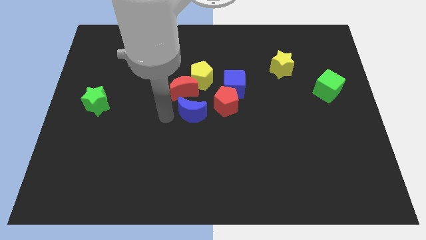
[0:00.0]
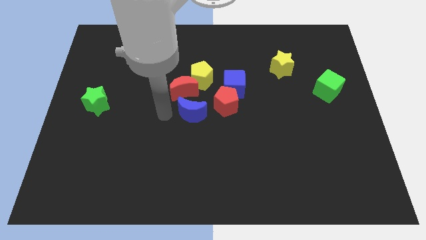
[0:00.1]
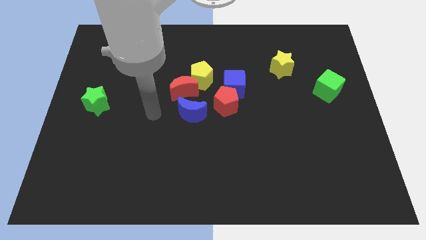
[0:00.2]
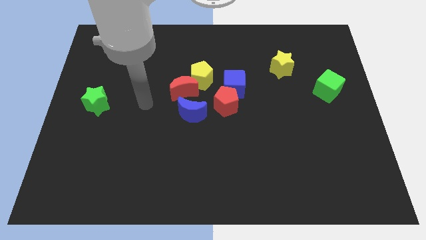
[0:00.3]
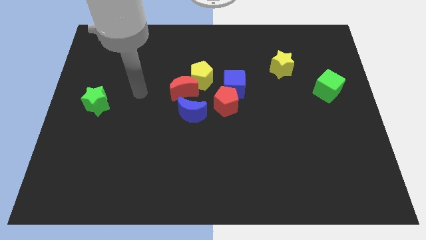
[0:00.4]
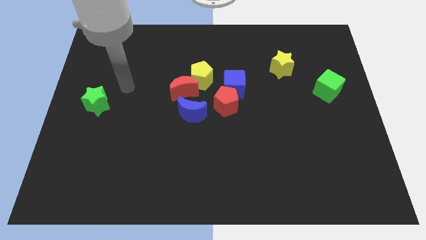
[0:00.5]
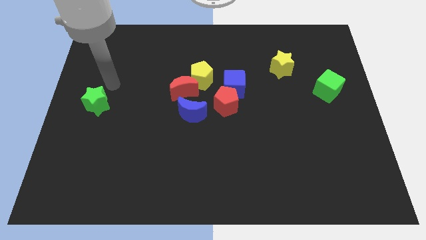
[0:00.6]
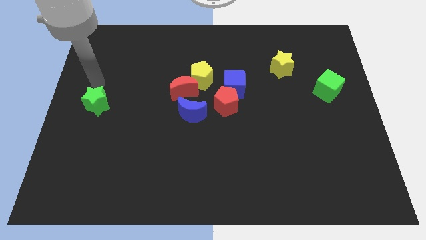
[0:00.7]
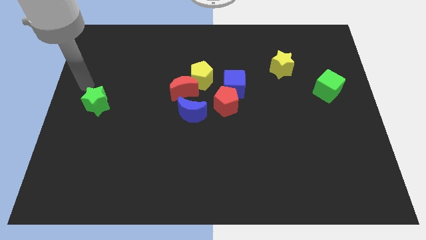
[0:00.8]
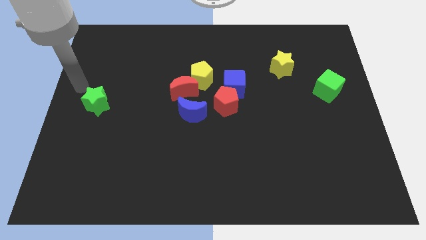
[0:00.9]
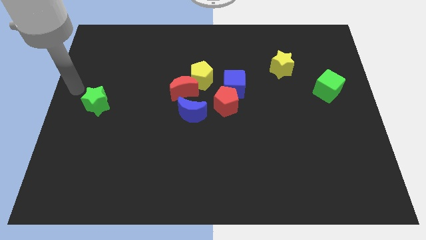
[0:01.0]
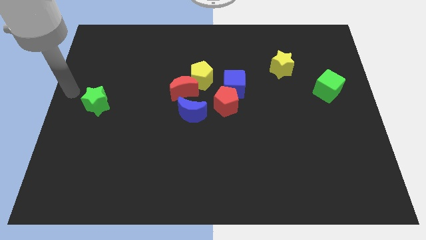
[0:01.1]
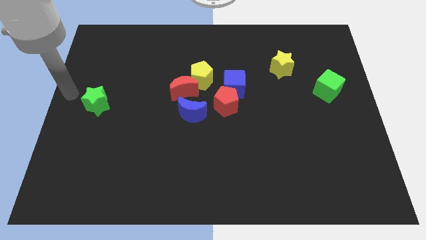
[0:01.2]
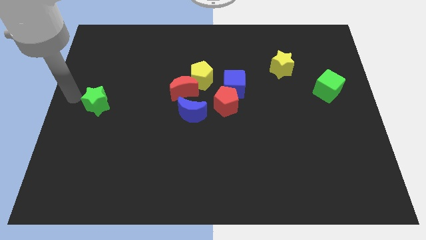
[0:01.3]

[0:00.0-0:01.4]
point your arm at the left of the green star

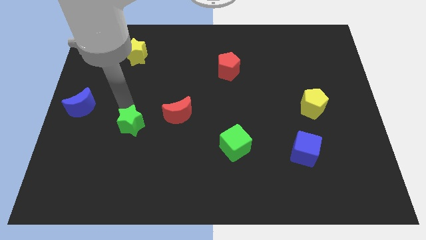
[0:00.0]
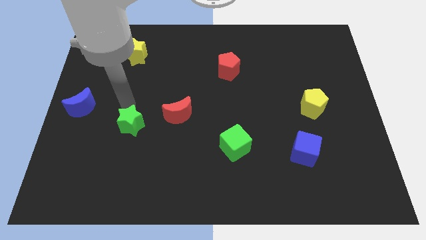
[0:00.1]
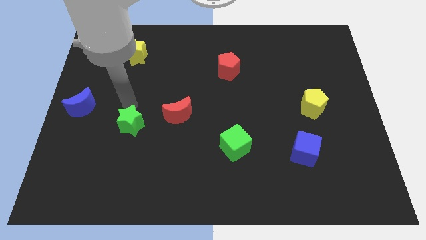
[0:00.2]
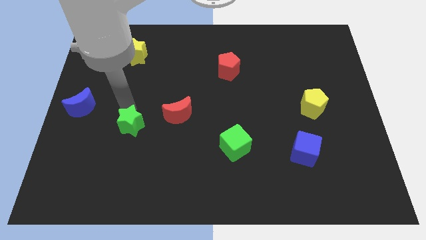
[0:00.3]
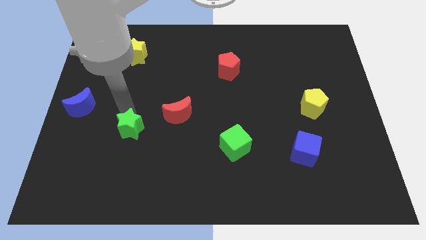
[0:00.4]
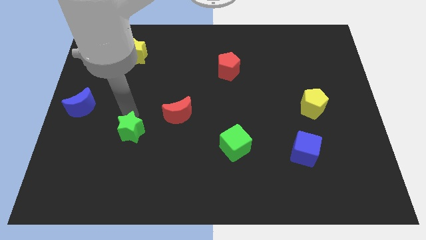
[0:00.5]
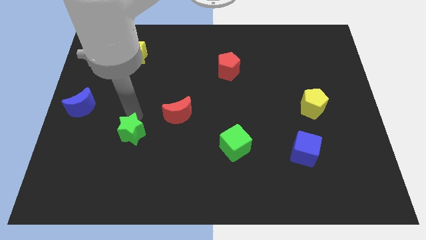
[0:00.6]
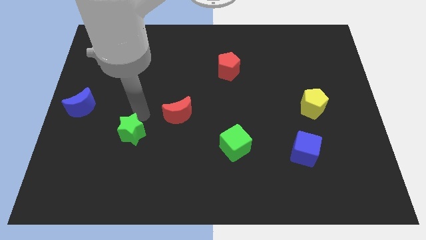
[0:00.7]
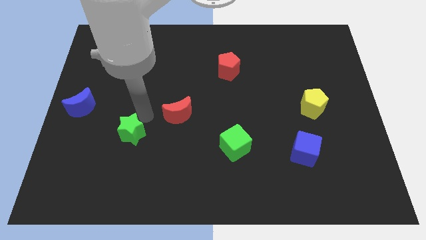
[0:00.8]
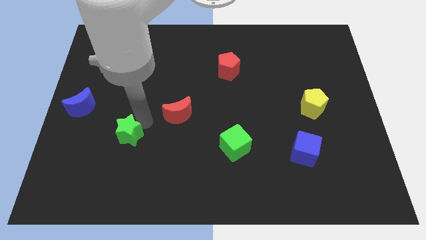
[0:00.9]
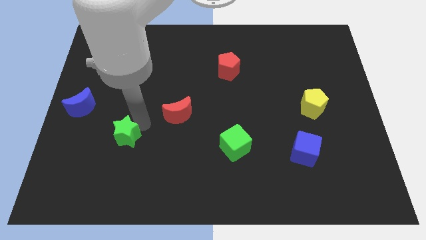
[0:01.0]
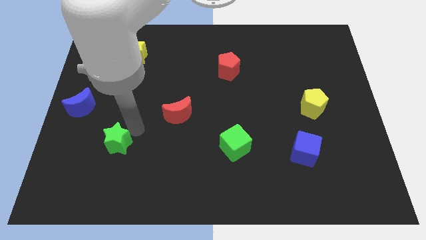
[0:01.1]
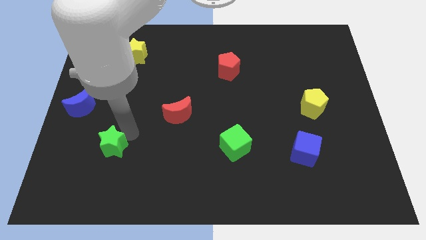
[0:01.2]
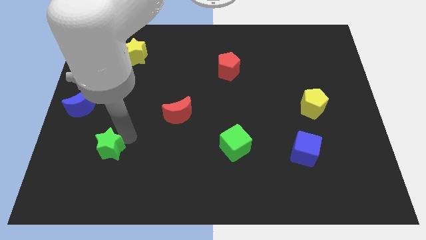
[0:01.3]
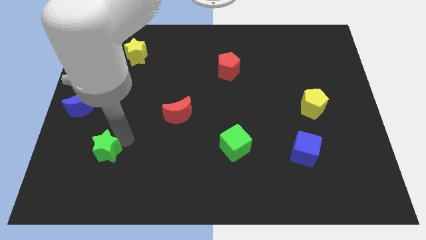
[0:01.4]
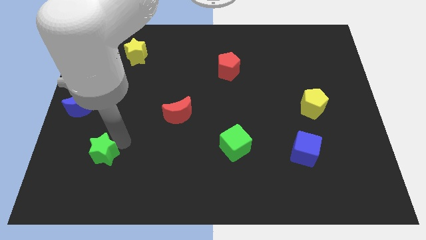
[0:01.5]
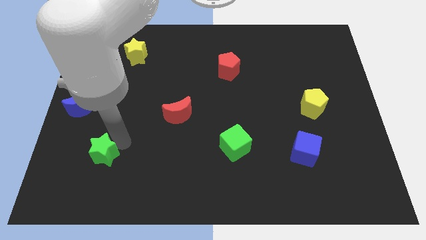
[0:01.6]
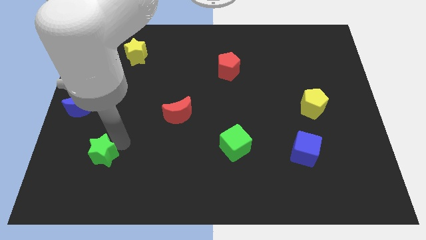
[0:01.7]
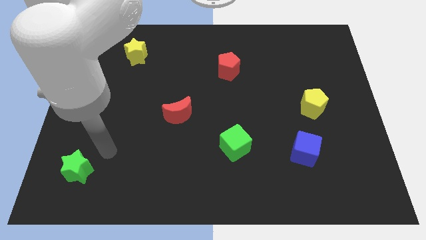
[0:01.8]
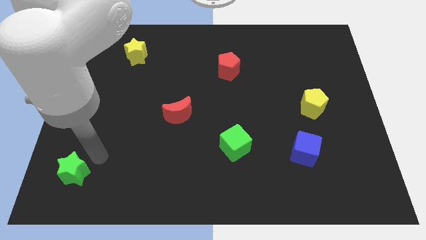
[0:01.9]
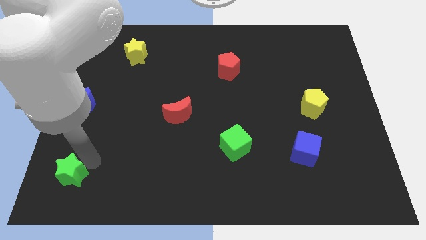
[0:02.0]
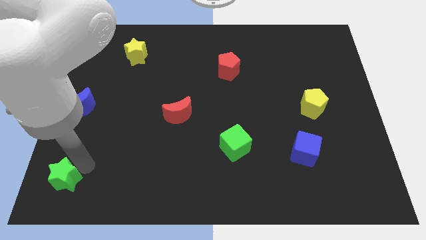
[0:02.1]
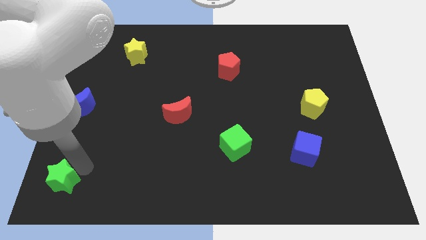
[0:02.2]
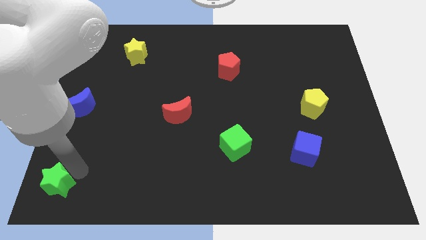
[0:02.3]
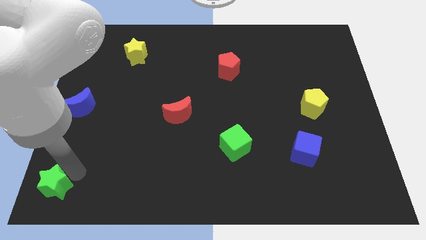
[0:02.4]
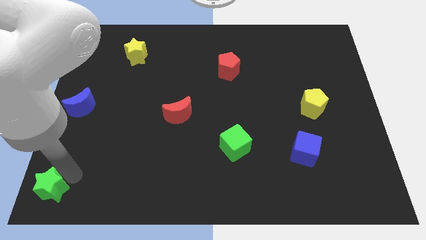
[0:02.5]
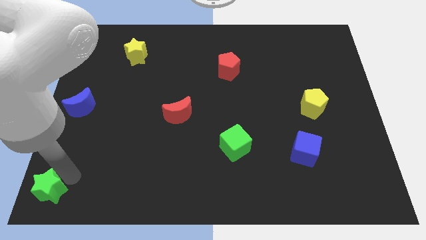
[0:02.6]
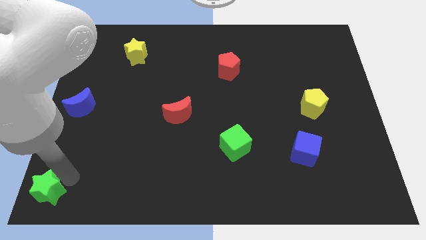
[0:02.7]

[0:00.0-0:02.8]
move the green star to the bottom left corner

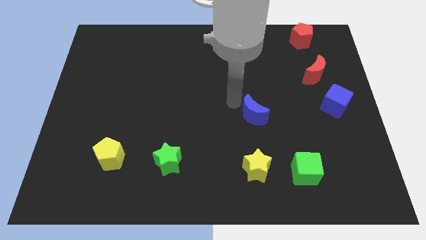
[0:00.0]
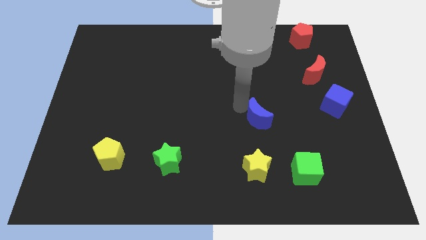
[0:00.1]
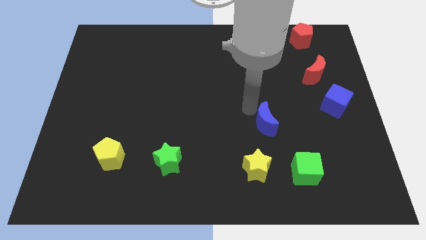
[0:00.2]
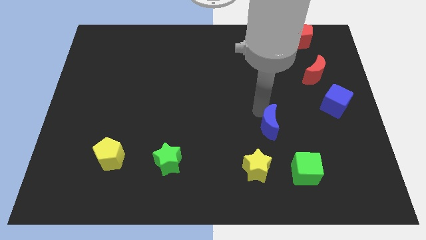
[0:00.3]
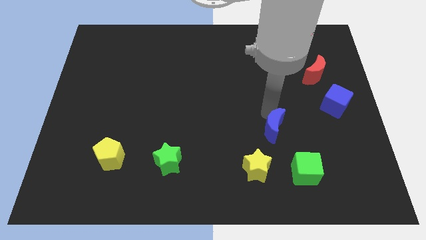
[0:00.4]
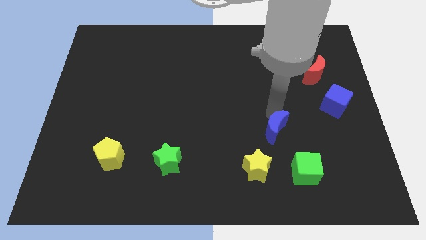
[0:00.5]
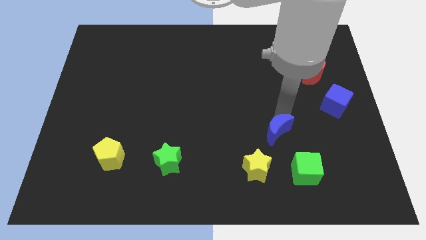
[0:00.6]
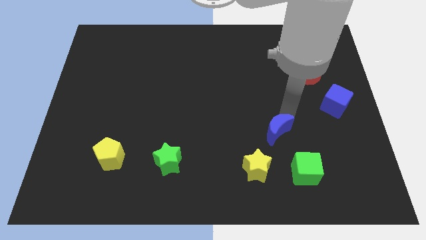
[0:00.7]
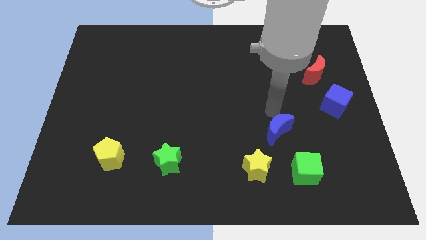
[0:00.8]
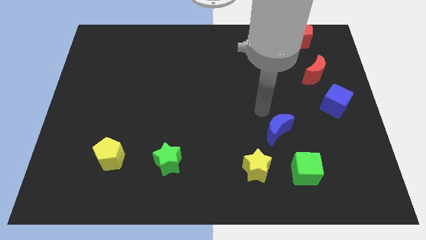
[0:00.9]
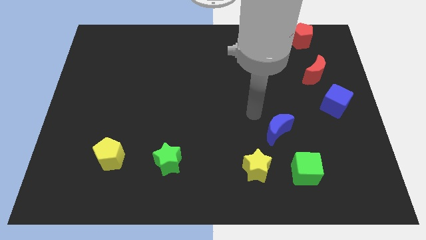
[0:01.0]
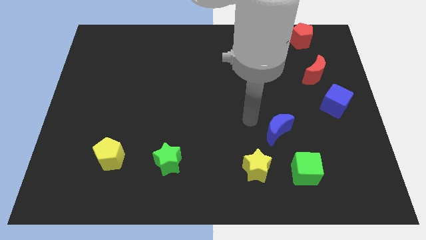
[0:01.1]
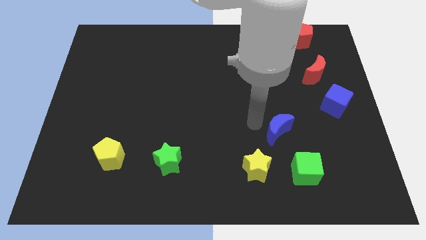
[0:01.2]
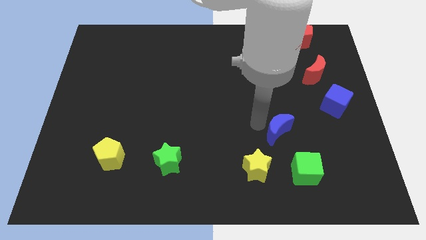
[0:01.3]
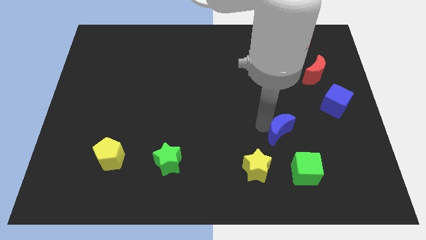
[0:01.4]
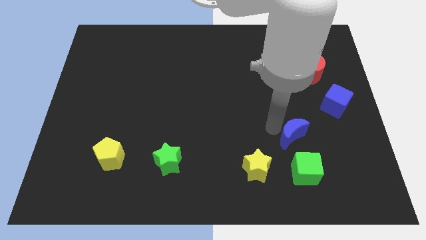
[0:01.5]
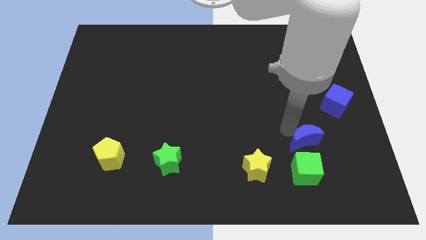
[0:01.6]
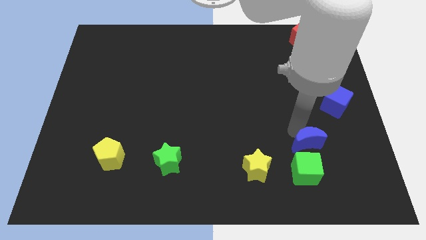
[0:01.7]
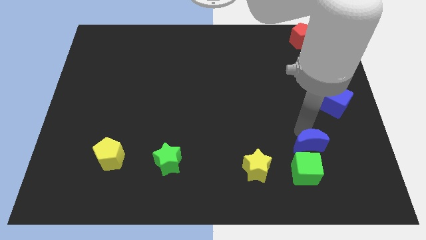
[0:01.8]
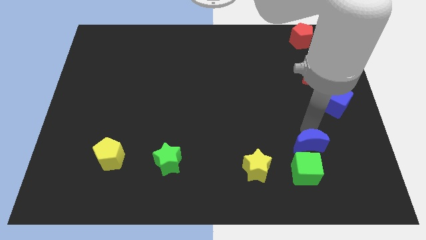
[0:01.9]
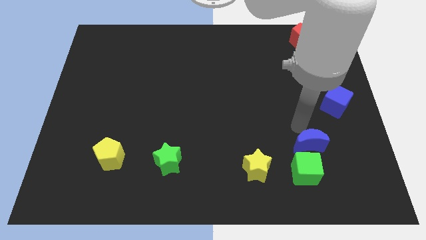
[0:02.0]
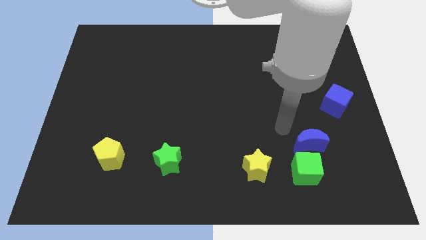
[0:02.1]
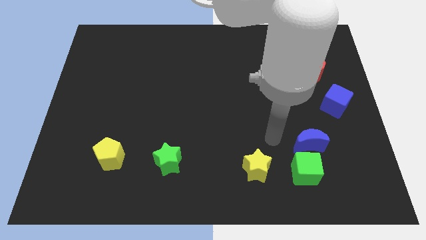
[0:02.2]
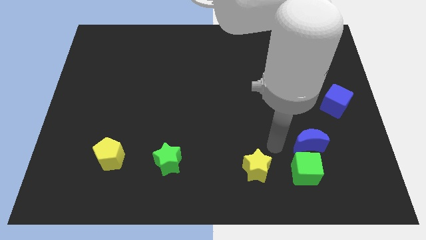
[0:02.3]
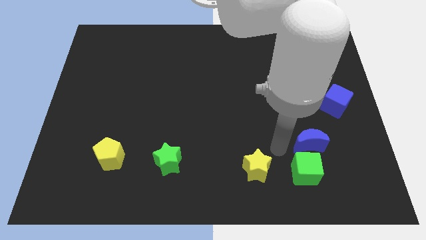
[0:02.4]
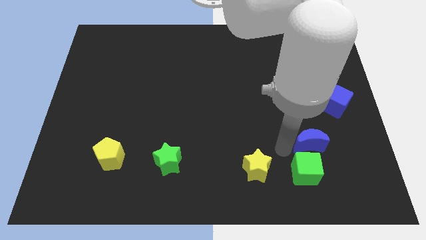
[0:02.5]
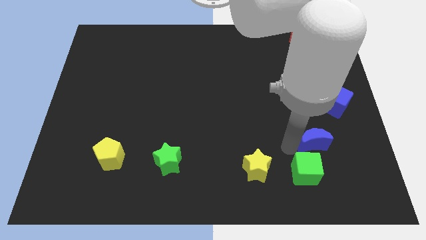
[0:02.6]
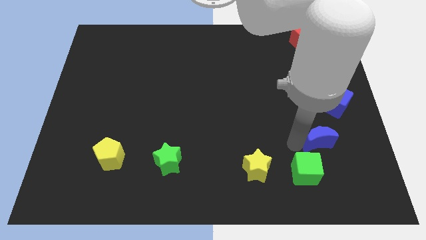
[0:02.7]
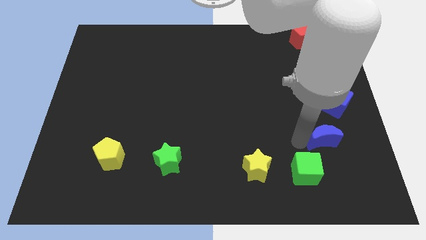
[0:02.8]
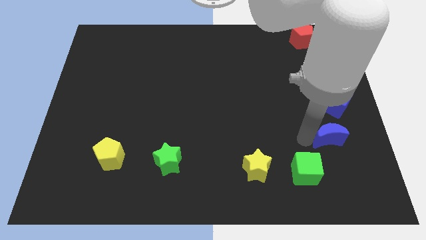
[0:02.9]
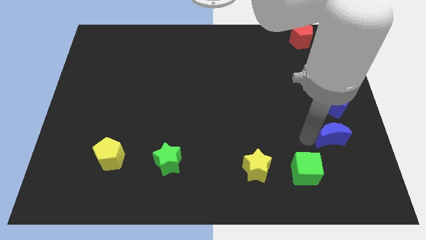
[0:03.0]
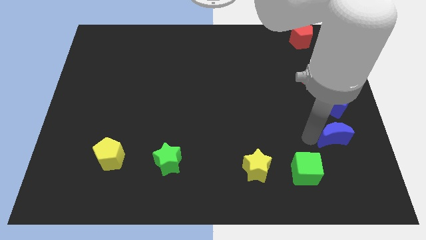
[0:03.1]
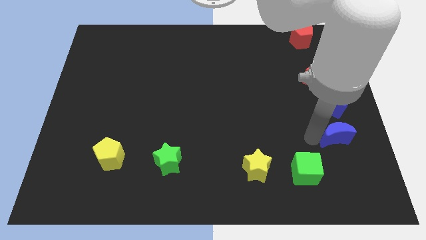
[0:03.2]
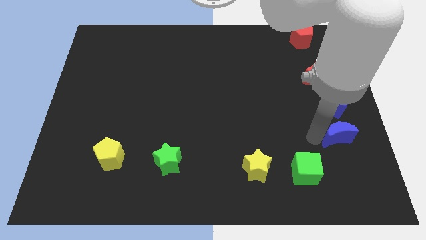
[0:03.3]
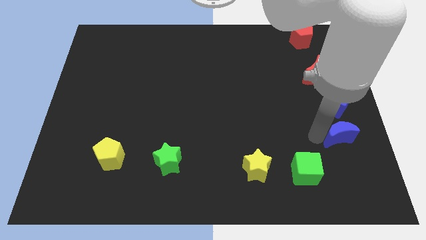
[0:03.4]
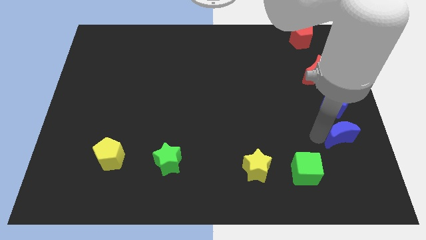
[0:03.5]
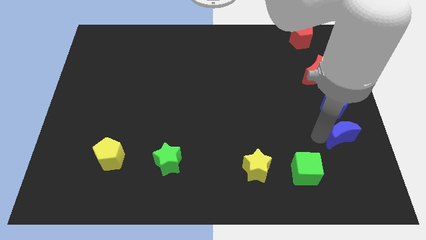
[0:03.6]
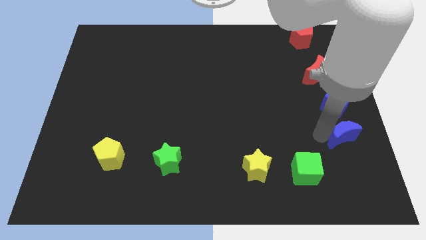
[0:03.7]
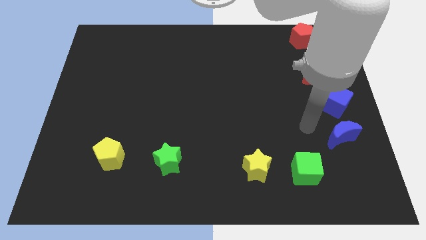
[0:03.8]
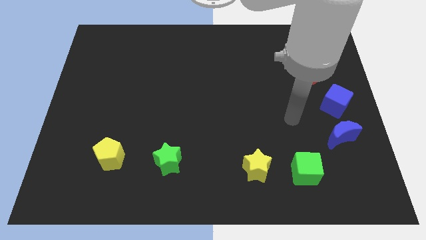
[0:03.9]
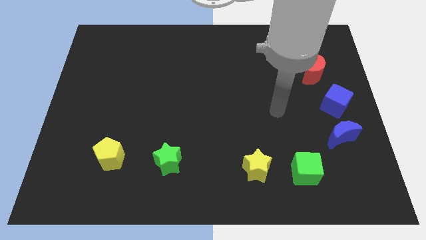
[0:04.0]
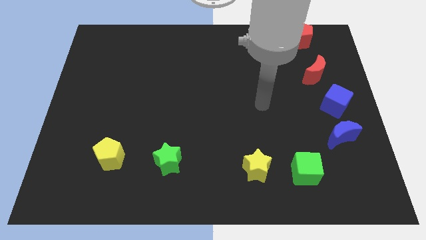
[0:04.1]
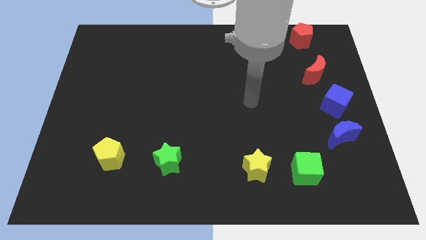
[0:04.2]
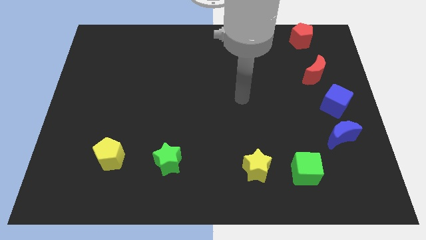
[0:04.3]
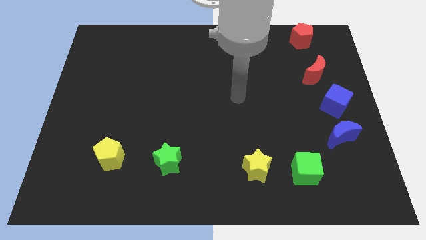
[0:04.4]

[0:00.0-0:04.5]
place the blue crescent below the blue cube

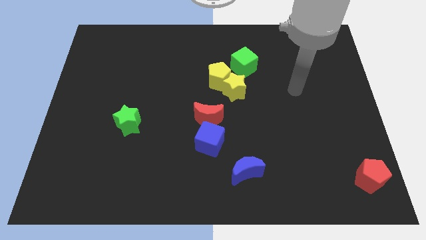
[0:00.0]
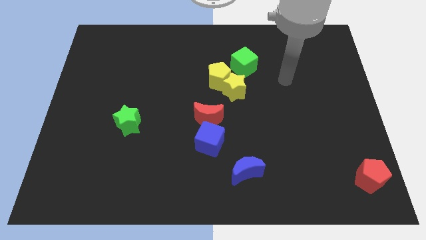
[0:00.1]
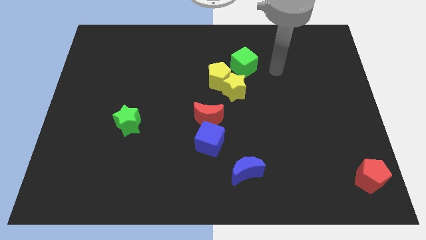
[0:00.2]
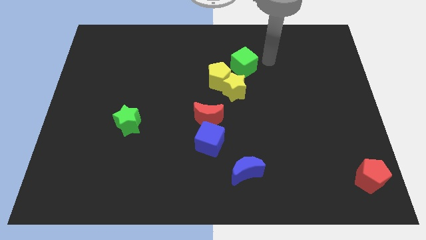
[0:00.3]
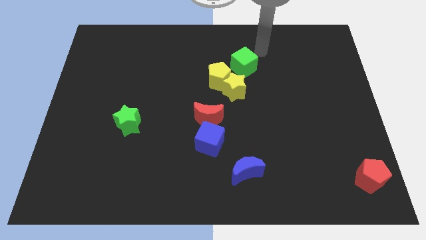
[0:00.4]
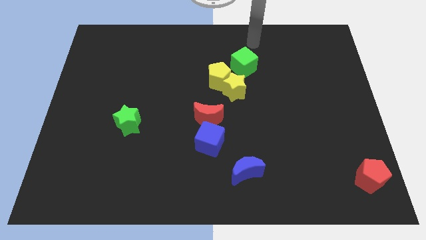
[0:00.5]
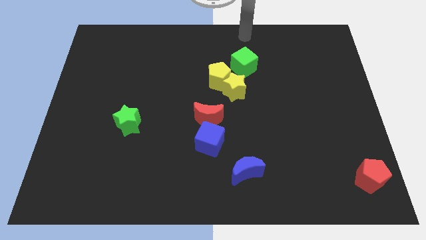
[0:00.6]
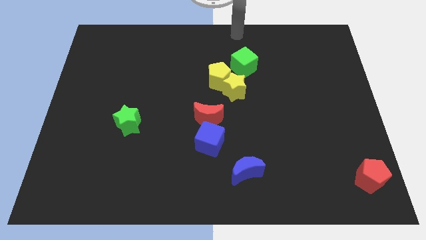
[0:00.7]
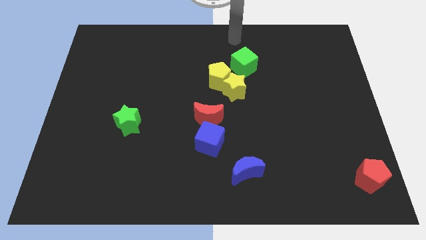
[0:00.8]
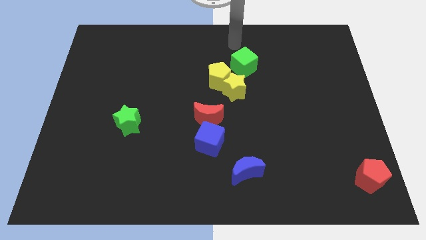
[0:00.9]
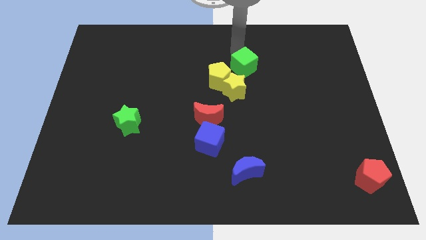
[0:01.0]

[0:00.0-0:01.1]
move your arm to the green cube
